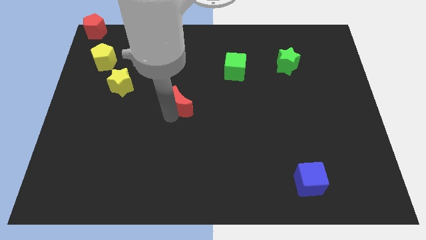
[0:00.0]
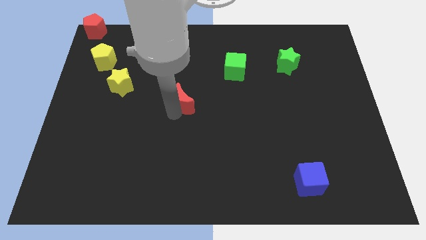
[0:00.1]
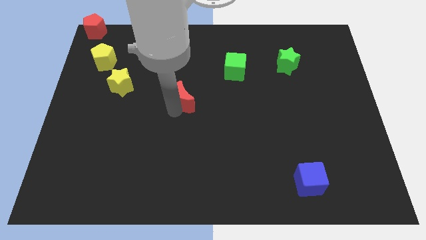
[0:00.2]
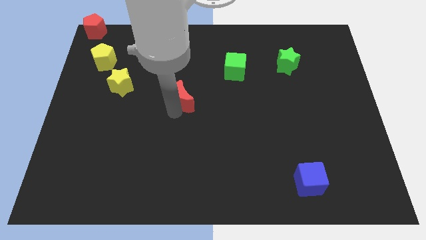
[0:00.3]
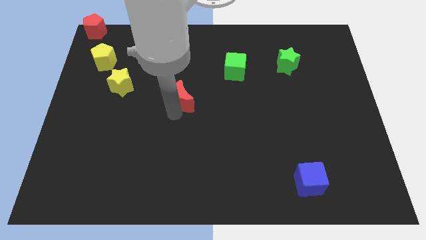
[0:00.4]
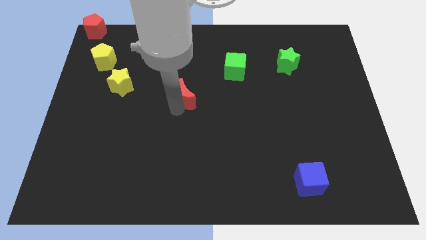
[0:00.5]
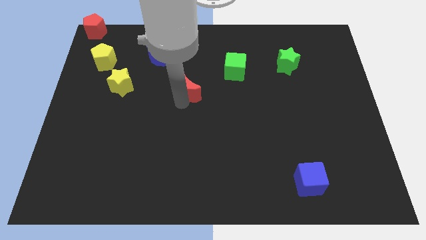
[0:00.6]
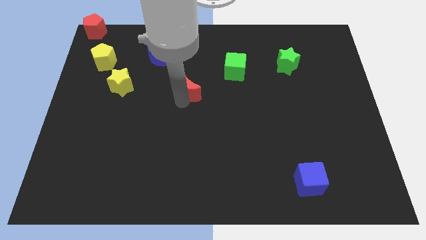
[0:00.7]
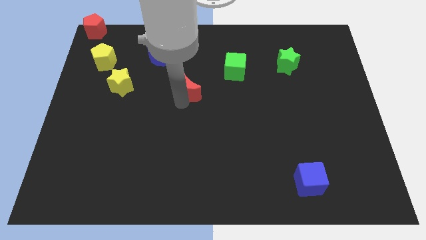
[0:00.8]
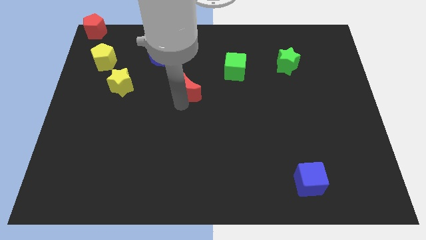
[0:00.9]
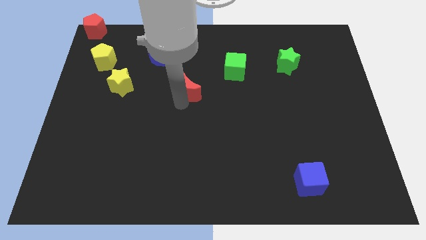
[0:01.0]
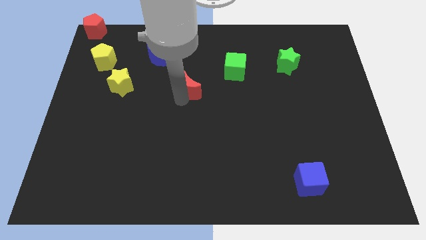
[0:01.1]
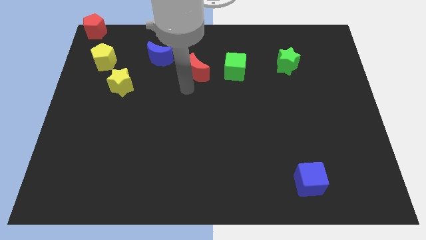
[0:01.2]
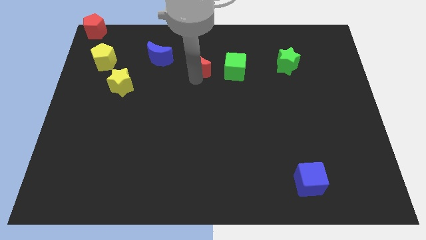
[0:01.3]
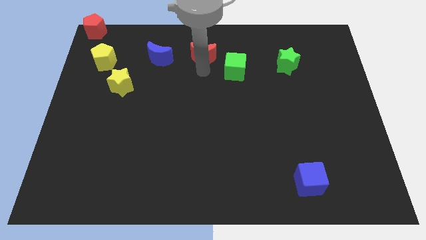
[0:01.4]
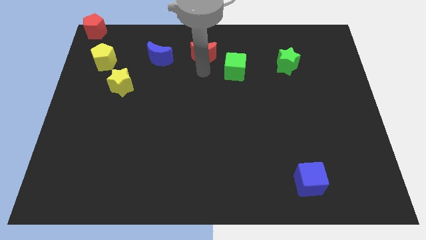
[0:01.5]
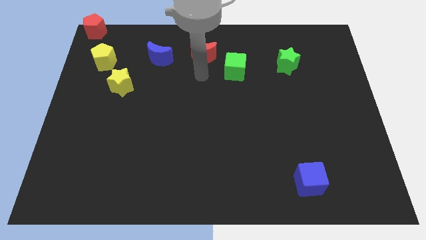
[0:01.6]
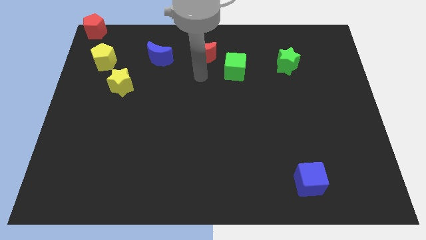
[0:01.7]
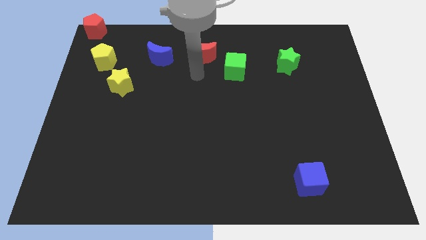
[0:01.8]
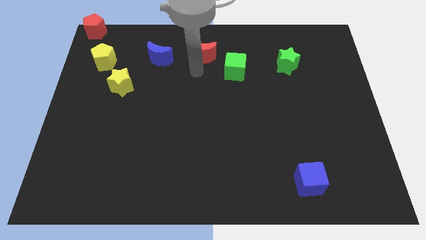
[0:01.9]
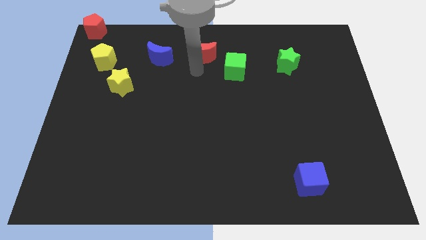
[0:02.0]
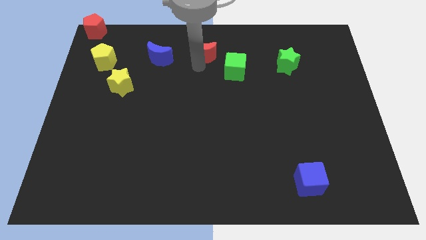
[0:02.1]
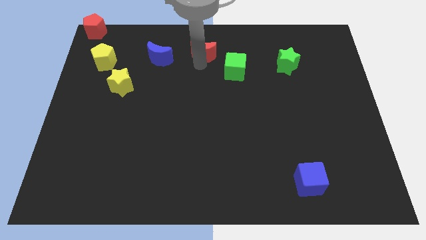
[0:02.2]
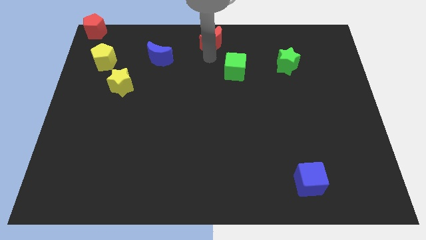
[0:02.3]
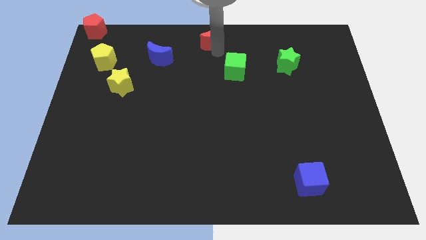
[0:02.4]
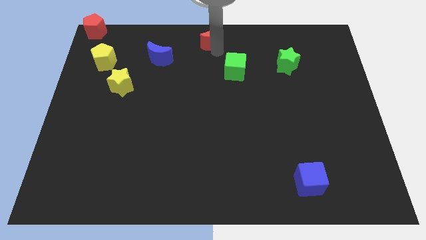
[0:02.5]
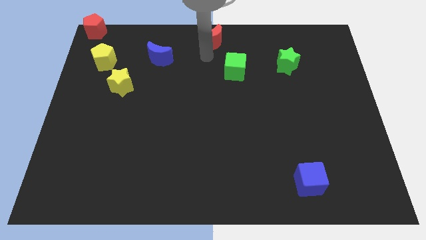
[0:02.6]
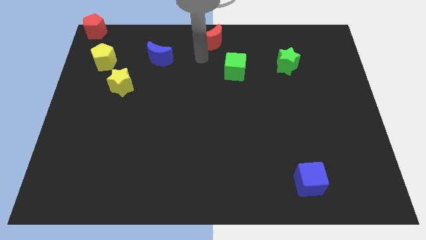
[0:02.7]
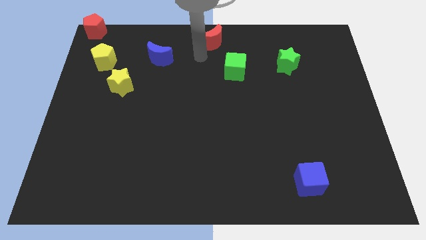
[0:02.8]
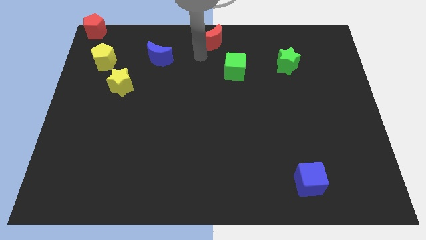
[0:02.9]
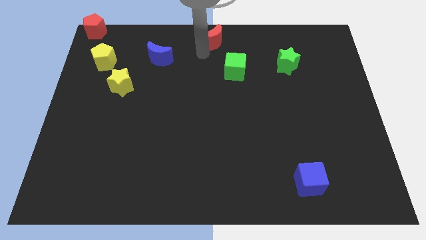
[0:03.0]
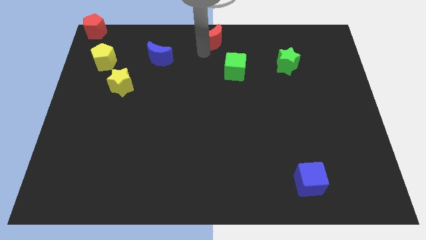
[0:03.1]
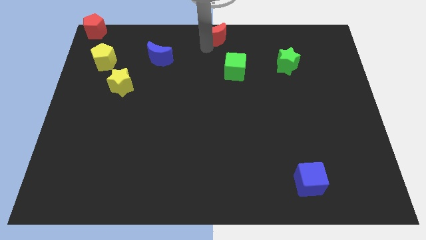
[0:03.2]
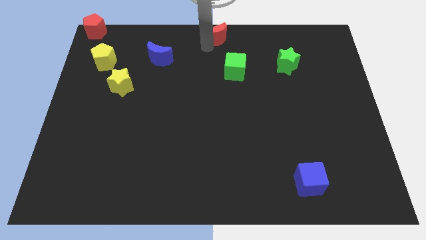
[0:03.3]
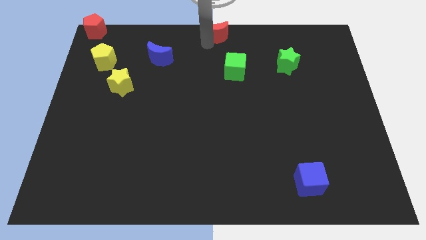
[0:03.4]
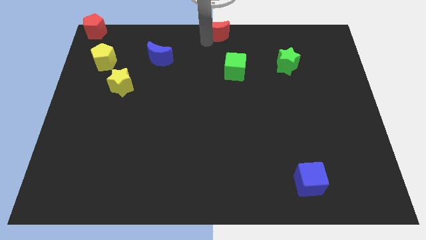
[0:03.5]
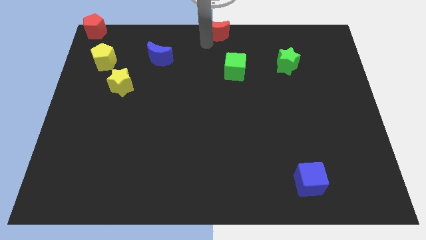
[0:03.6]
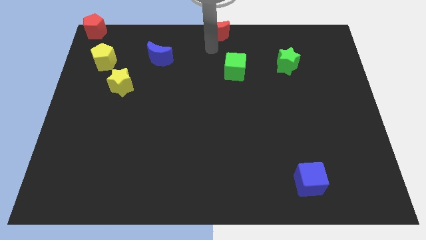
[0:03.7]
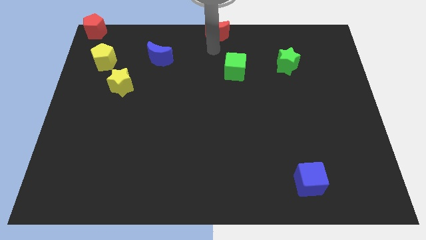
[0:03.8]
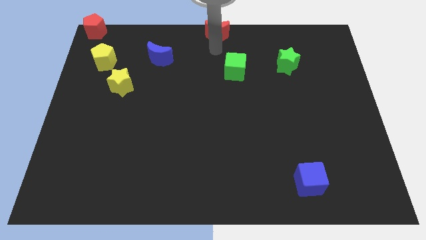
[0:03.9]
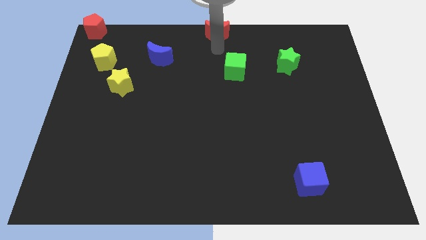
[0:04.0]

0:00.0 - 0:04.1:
move the red crescent to the top center of the board

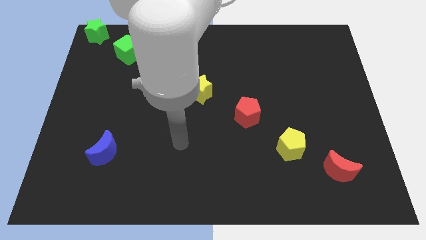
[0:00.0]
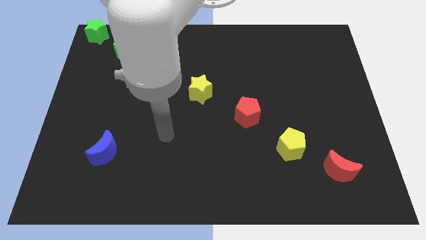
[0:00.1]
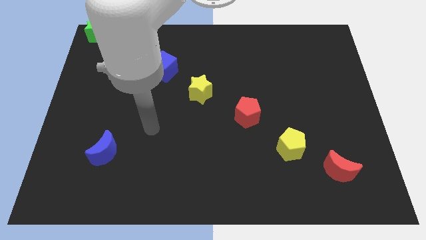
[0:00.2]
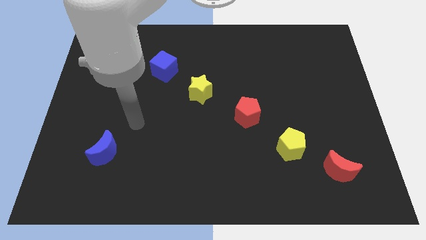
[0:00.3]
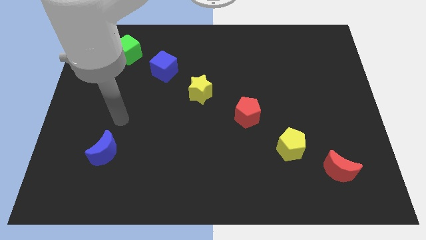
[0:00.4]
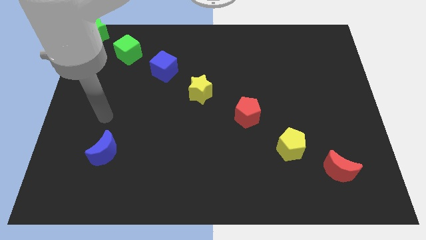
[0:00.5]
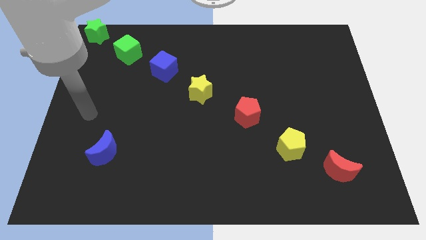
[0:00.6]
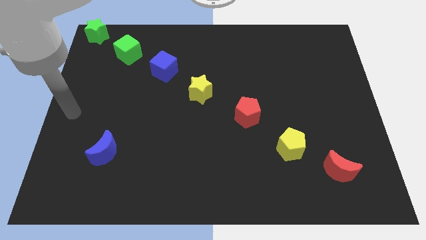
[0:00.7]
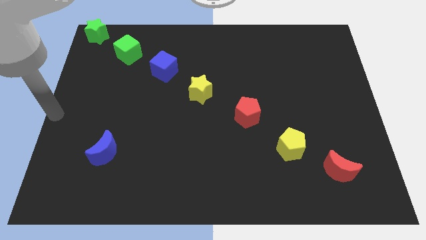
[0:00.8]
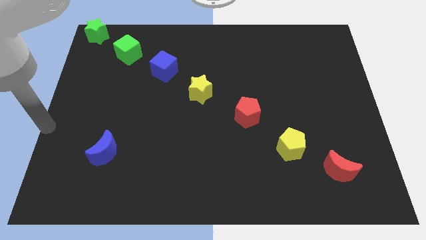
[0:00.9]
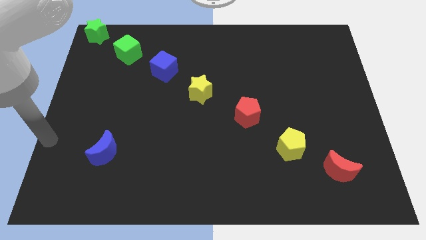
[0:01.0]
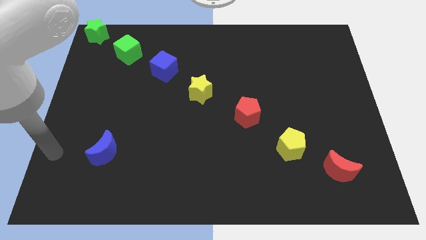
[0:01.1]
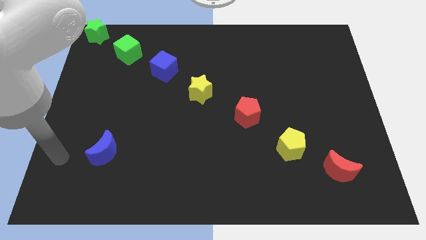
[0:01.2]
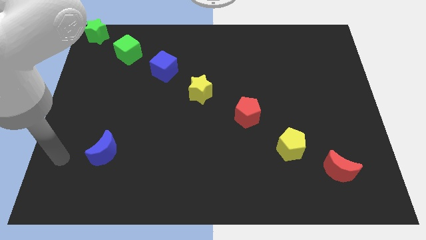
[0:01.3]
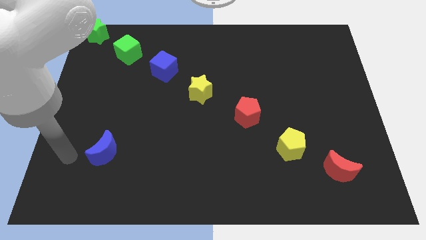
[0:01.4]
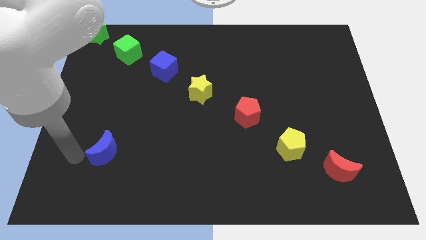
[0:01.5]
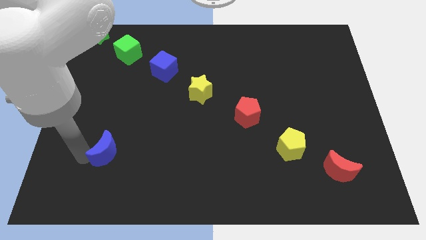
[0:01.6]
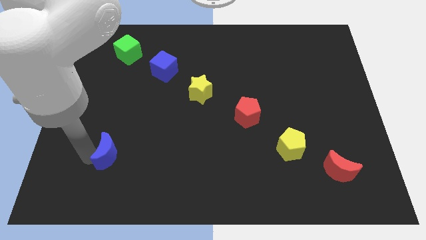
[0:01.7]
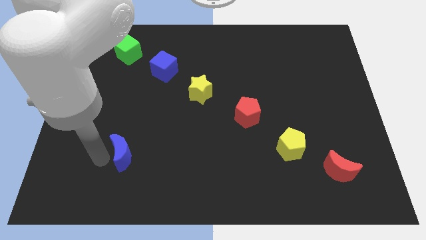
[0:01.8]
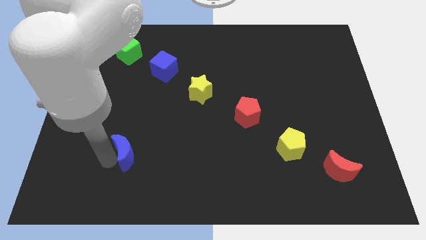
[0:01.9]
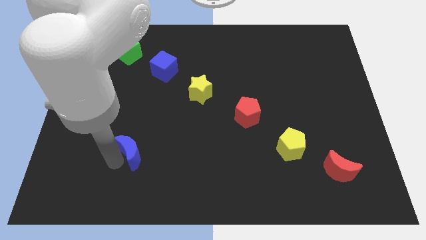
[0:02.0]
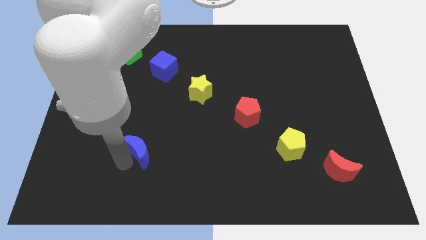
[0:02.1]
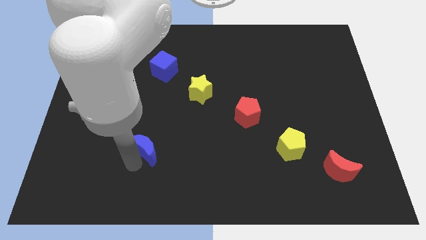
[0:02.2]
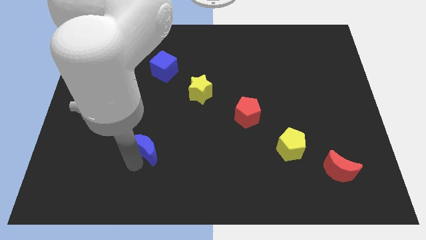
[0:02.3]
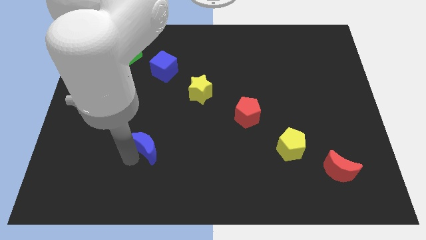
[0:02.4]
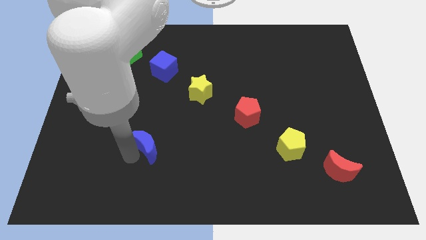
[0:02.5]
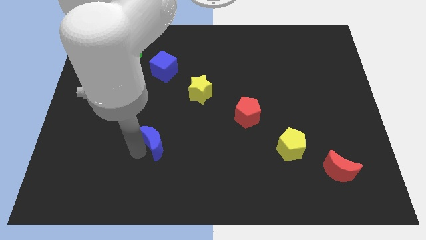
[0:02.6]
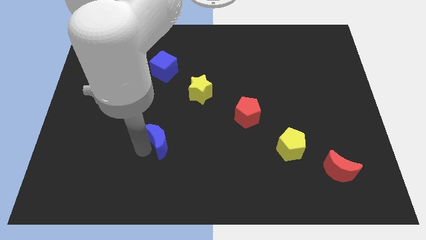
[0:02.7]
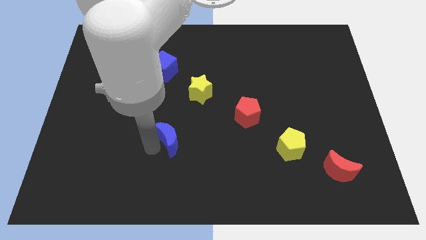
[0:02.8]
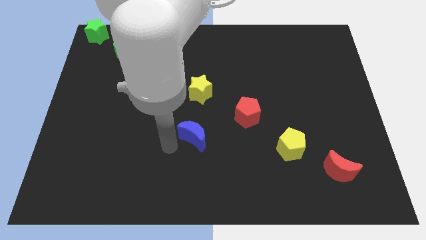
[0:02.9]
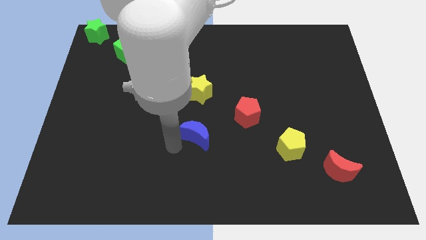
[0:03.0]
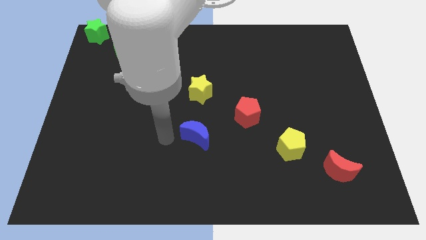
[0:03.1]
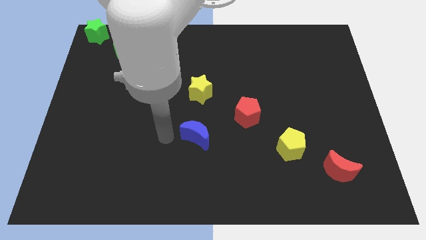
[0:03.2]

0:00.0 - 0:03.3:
move the blue crescent below the yellow star

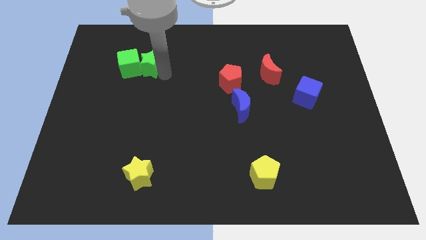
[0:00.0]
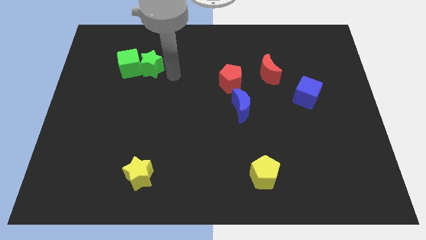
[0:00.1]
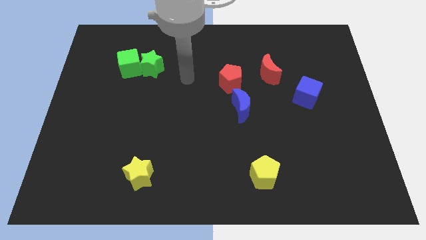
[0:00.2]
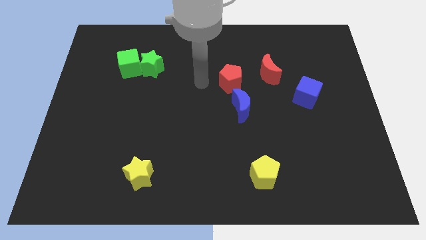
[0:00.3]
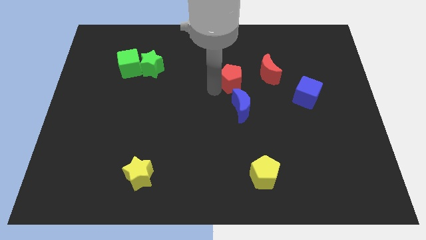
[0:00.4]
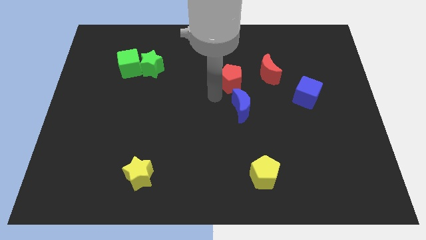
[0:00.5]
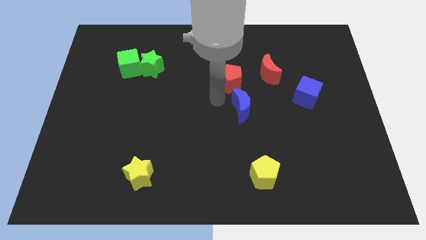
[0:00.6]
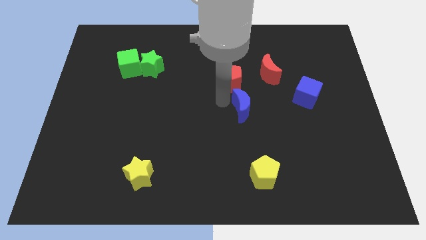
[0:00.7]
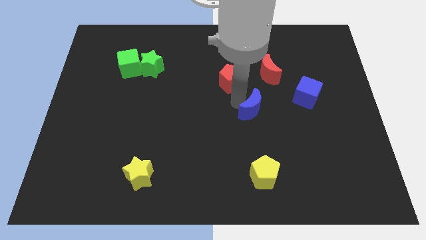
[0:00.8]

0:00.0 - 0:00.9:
place your arm on the left side of blue crescent

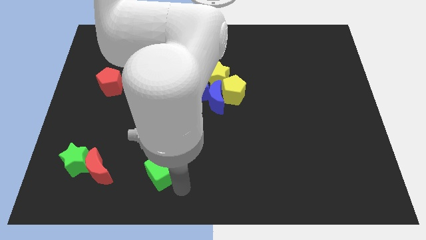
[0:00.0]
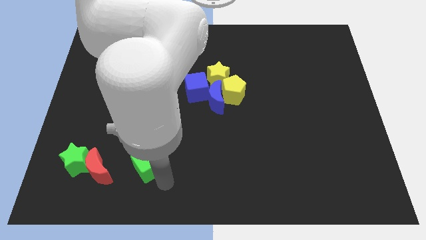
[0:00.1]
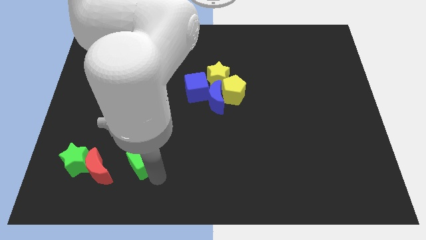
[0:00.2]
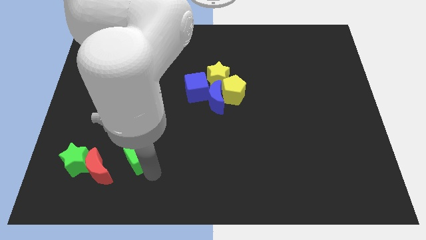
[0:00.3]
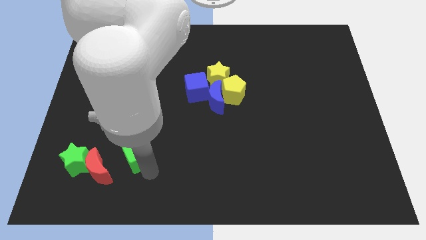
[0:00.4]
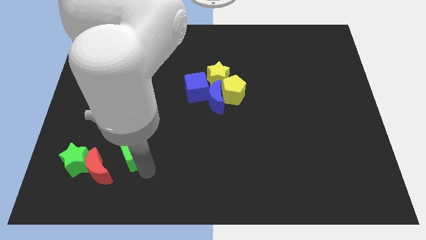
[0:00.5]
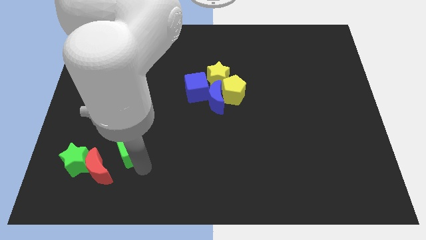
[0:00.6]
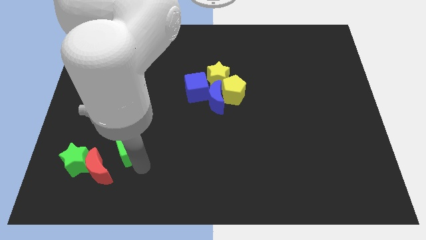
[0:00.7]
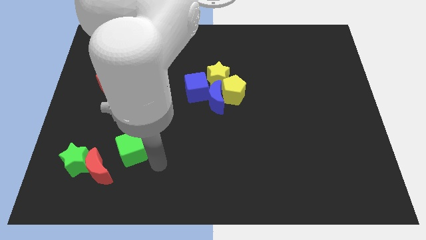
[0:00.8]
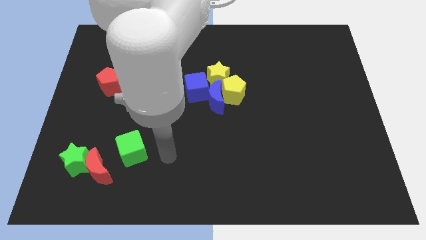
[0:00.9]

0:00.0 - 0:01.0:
move the green cube to the top right of the red moon
